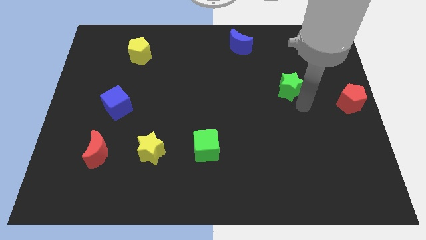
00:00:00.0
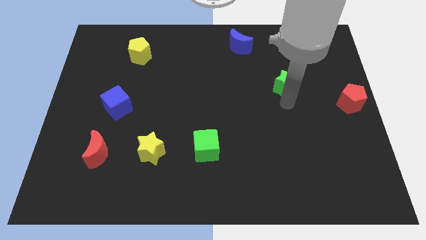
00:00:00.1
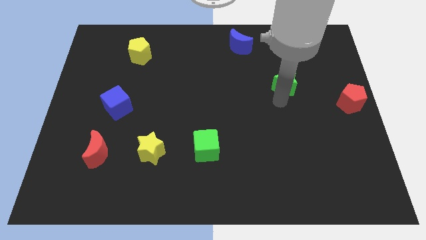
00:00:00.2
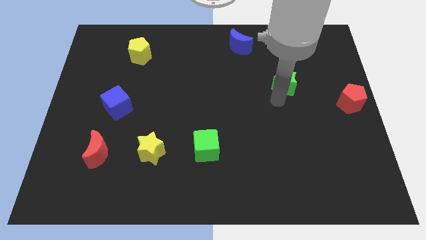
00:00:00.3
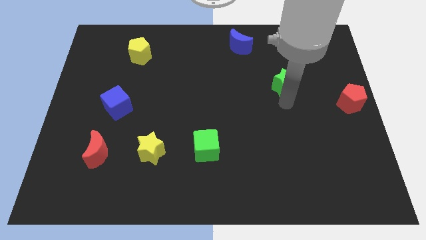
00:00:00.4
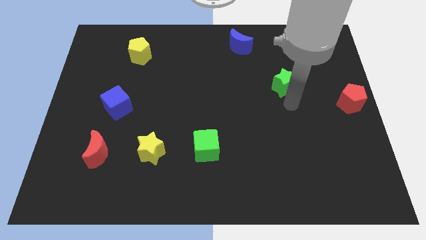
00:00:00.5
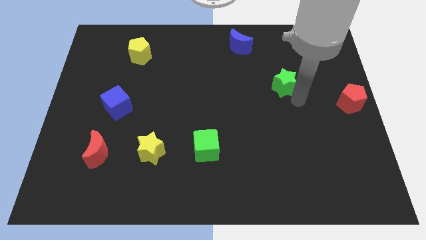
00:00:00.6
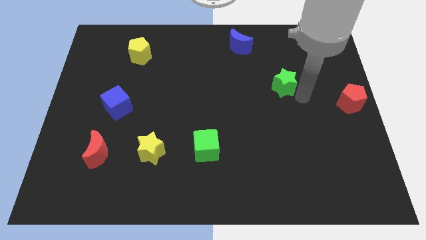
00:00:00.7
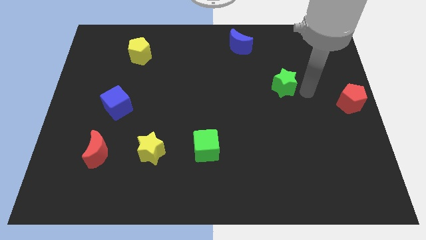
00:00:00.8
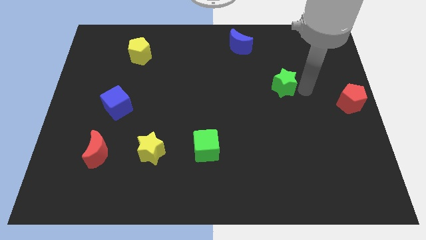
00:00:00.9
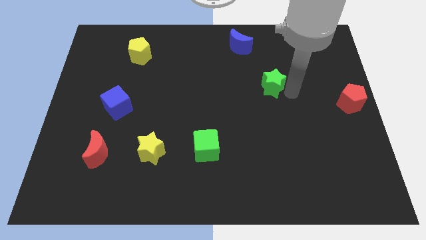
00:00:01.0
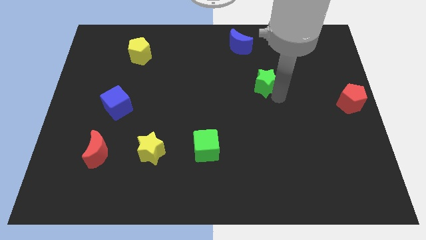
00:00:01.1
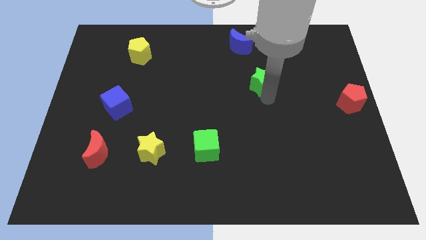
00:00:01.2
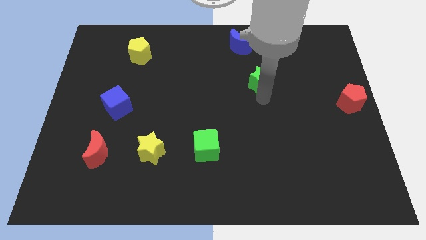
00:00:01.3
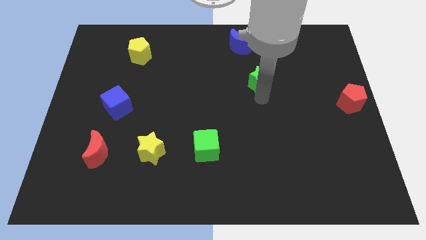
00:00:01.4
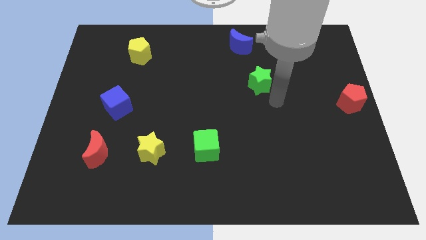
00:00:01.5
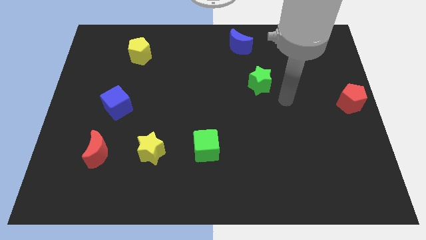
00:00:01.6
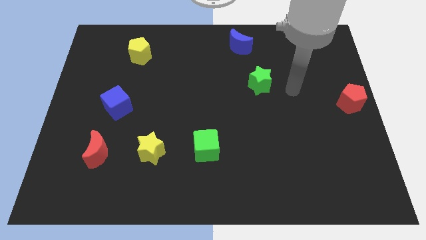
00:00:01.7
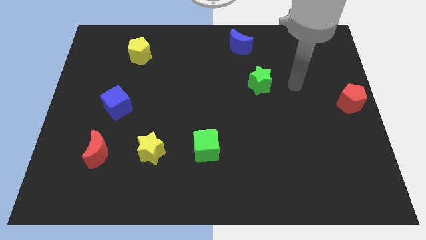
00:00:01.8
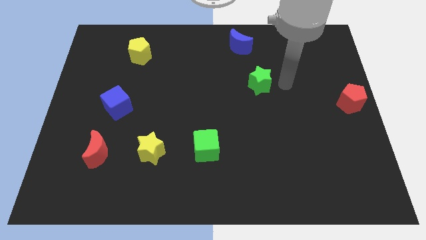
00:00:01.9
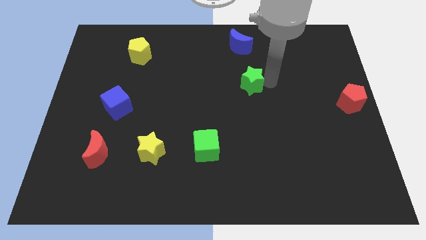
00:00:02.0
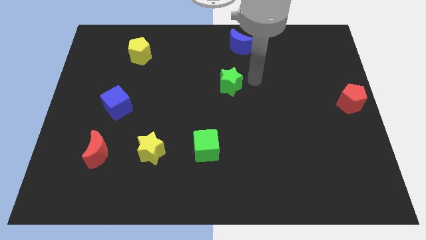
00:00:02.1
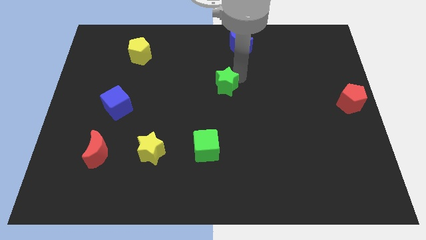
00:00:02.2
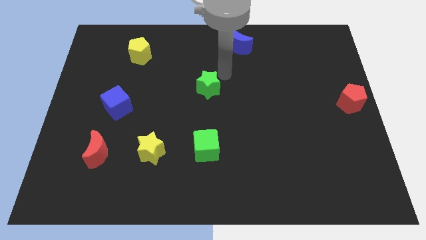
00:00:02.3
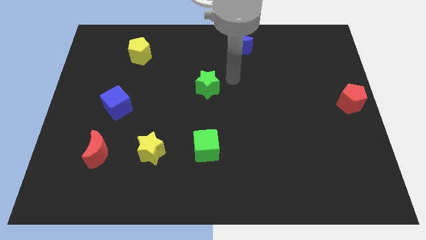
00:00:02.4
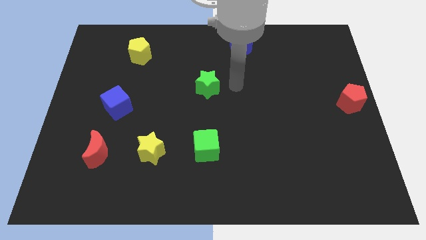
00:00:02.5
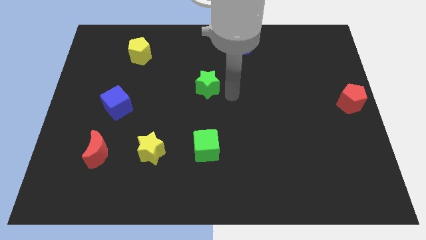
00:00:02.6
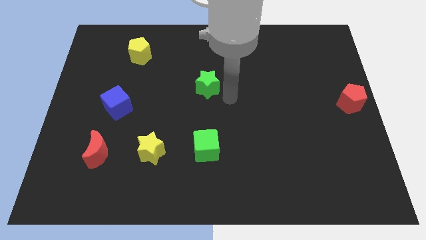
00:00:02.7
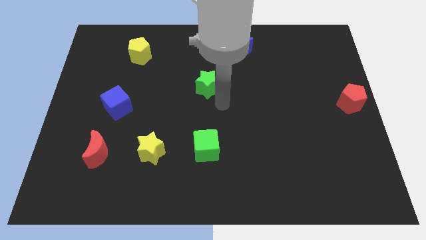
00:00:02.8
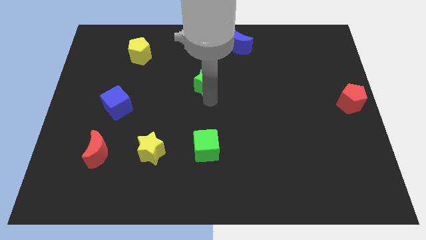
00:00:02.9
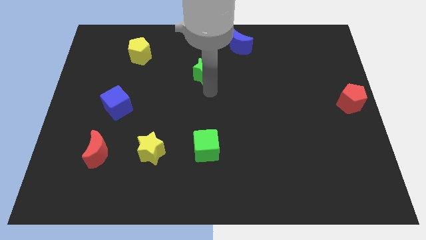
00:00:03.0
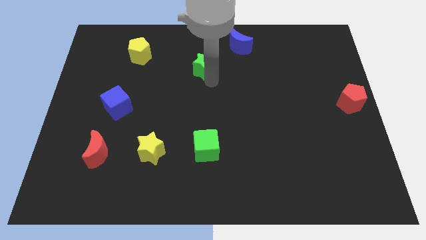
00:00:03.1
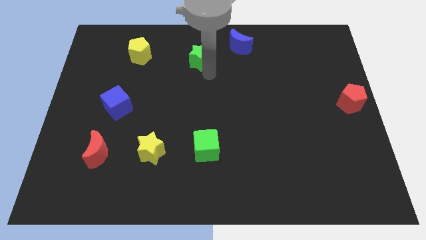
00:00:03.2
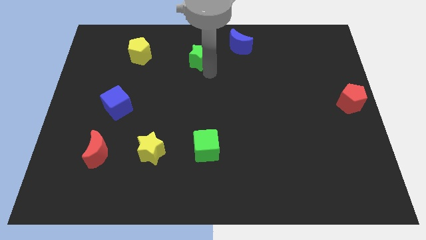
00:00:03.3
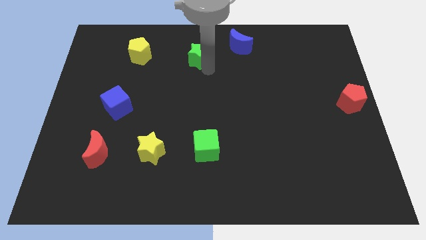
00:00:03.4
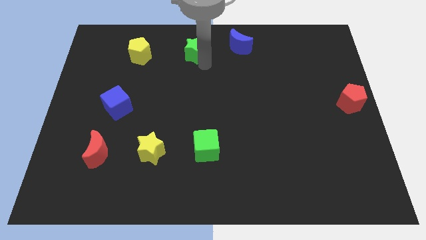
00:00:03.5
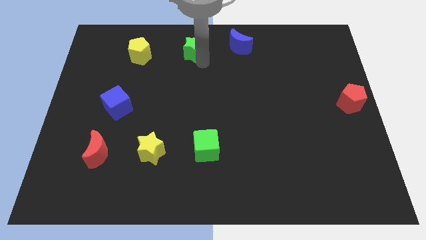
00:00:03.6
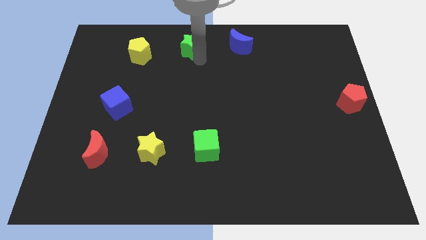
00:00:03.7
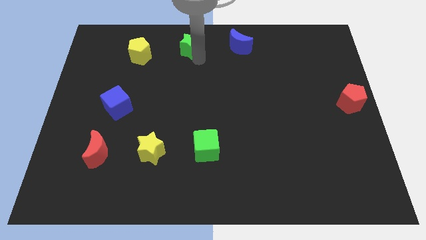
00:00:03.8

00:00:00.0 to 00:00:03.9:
place the green star in between the yellow pentagon and blue crescent

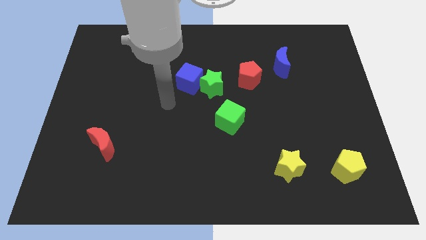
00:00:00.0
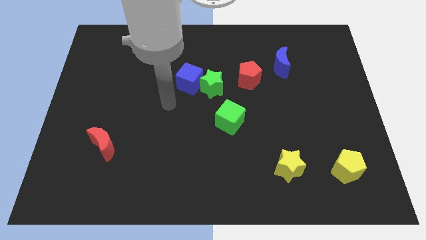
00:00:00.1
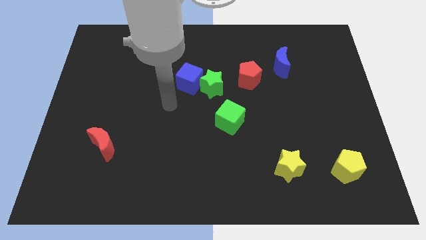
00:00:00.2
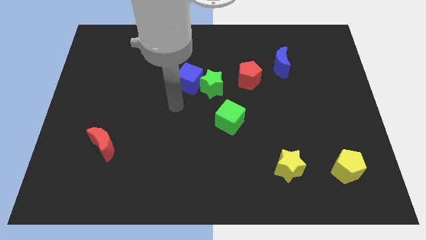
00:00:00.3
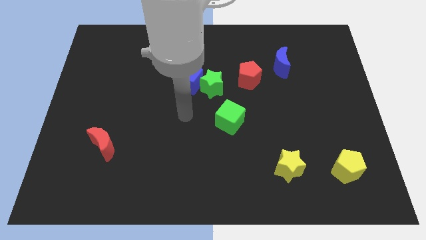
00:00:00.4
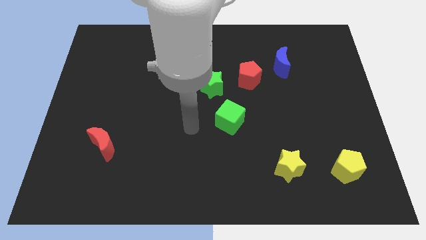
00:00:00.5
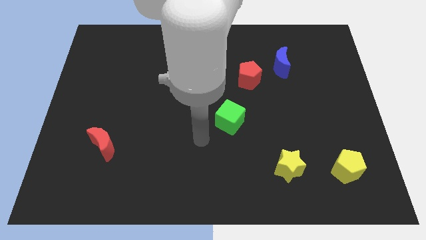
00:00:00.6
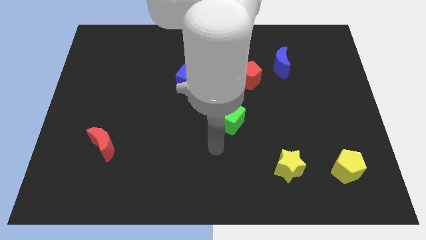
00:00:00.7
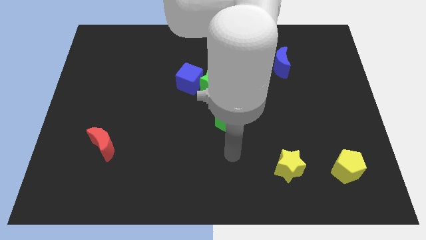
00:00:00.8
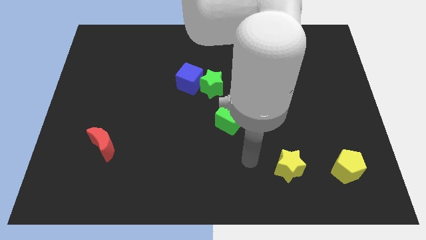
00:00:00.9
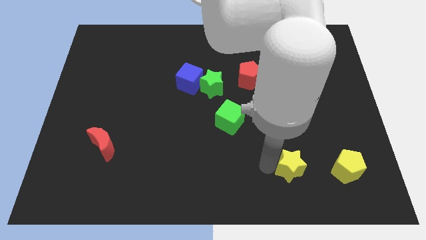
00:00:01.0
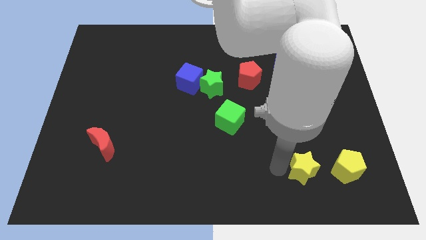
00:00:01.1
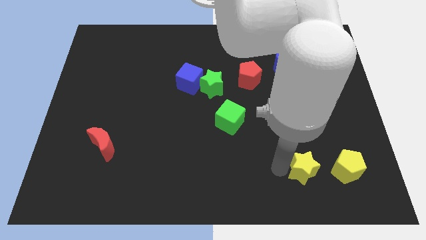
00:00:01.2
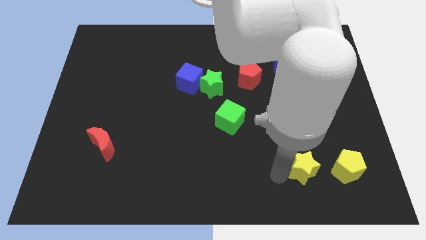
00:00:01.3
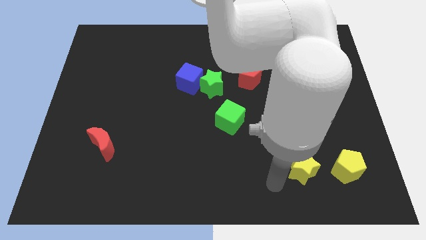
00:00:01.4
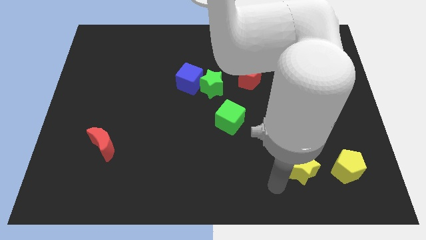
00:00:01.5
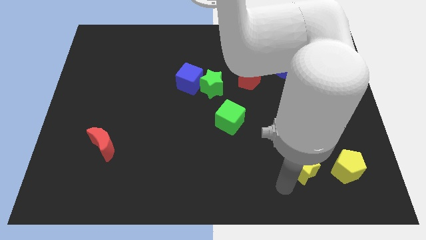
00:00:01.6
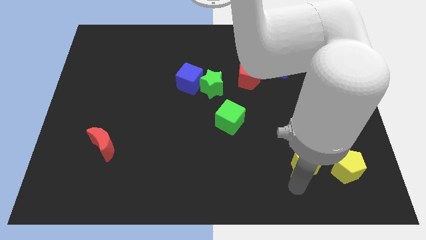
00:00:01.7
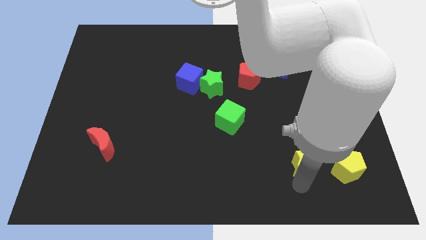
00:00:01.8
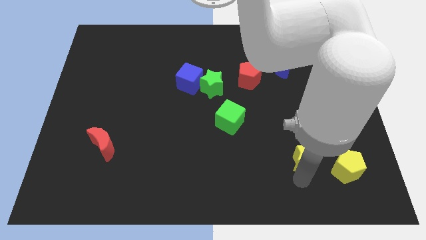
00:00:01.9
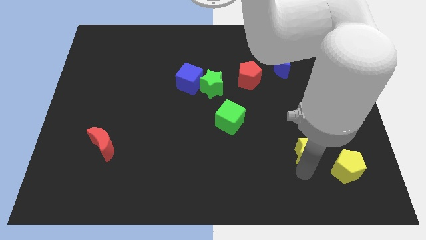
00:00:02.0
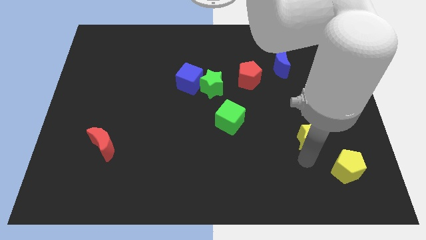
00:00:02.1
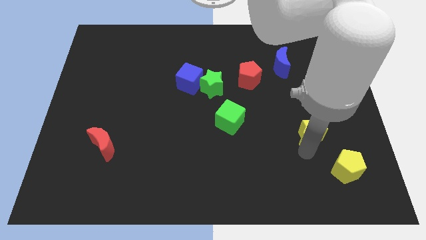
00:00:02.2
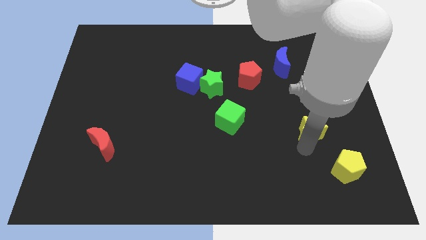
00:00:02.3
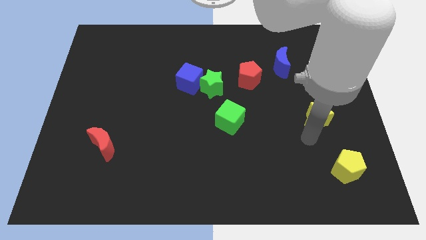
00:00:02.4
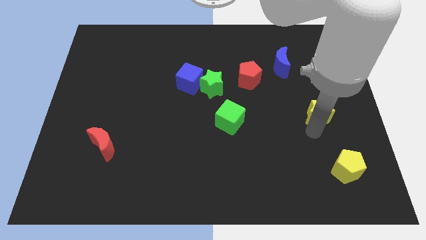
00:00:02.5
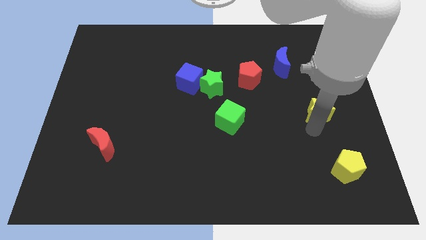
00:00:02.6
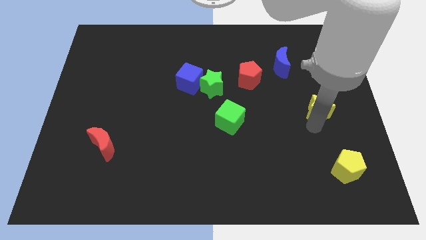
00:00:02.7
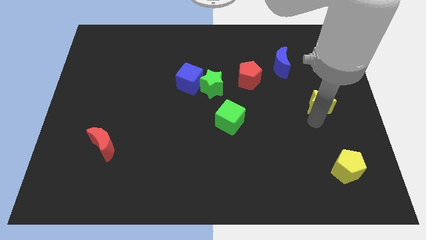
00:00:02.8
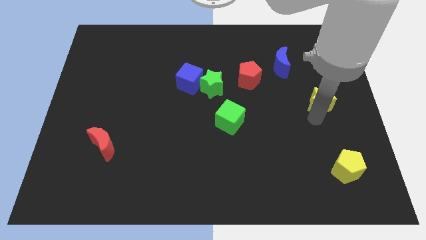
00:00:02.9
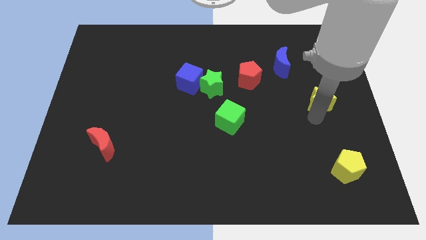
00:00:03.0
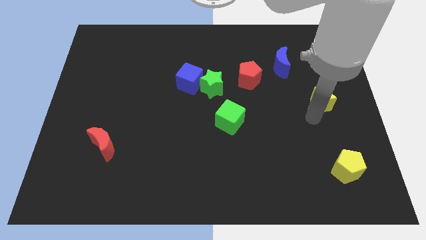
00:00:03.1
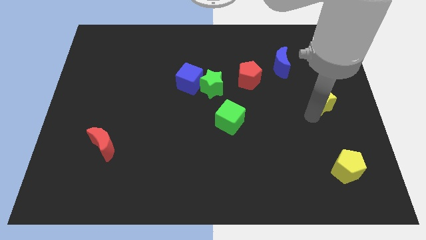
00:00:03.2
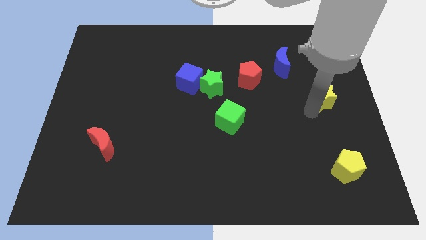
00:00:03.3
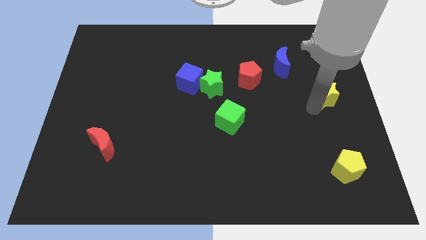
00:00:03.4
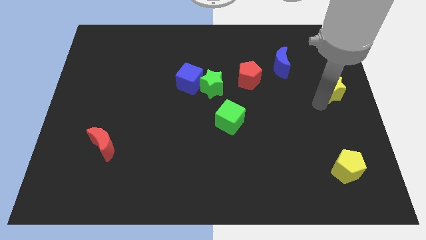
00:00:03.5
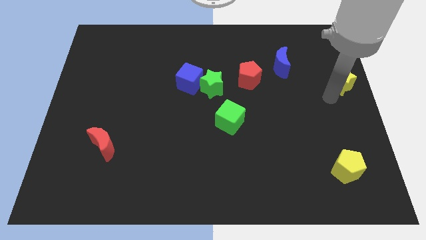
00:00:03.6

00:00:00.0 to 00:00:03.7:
move the yellow star towards the top right side of the board

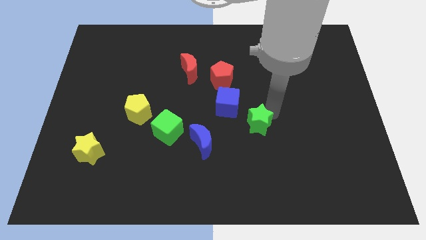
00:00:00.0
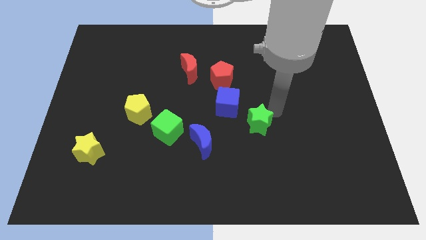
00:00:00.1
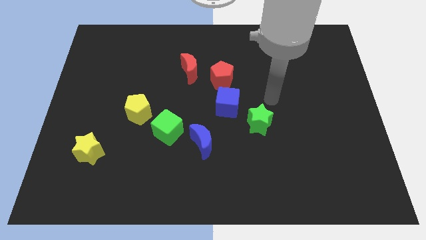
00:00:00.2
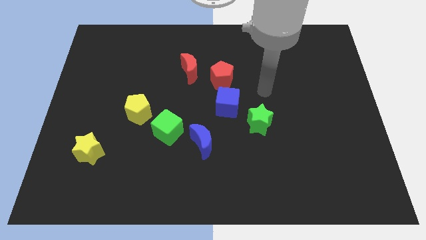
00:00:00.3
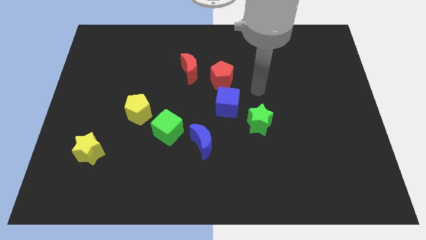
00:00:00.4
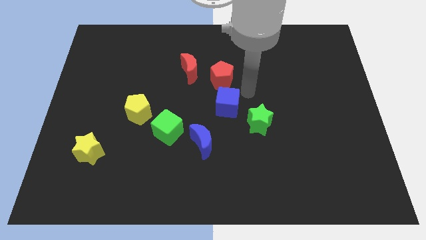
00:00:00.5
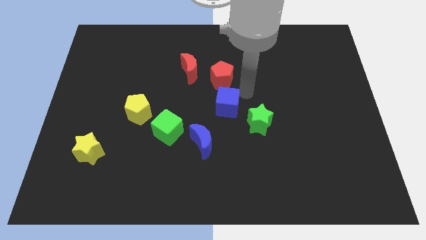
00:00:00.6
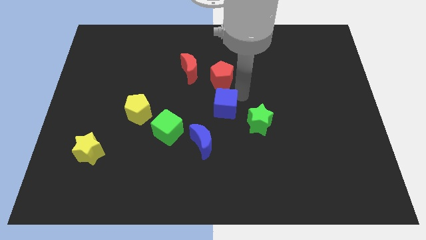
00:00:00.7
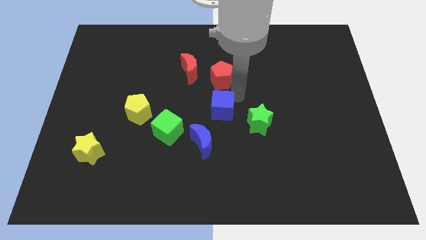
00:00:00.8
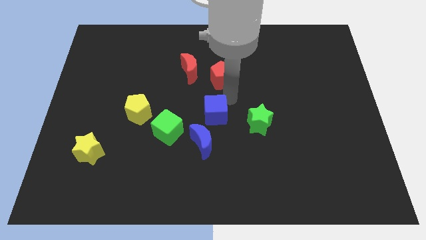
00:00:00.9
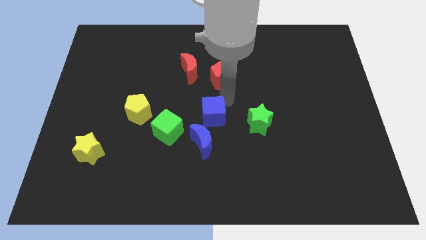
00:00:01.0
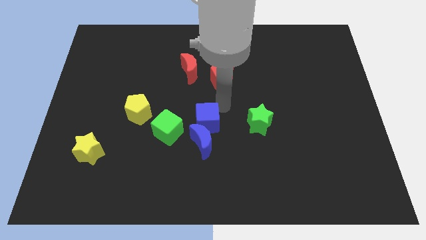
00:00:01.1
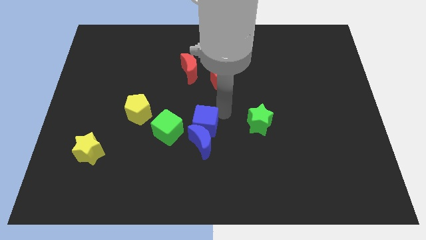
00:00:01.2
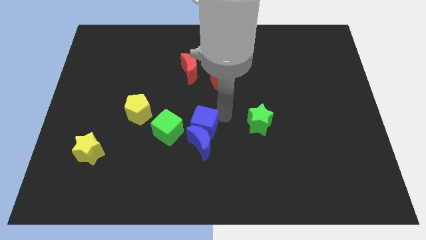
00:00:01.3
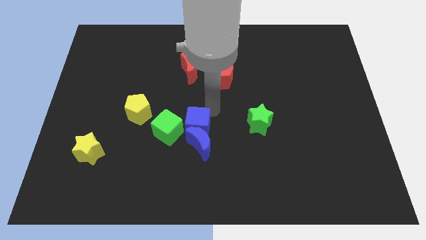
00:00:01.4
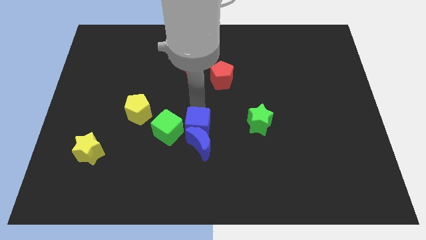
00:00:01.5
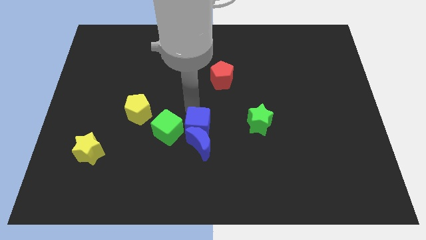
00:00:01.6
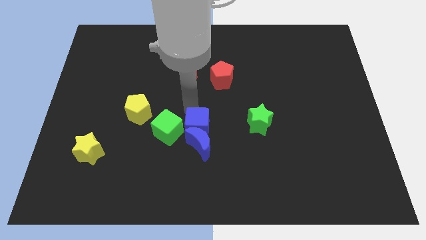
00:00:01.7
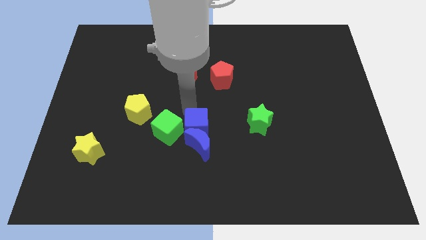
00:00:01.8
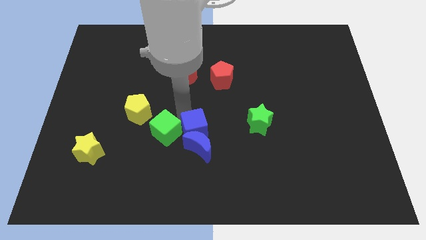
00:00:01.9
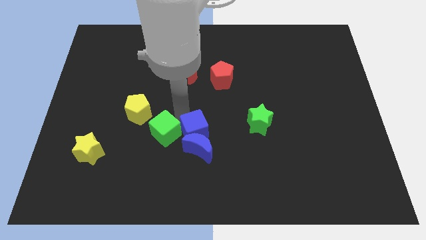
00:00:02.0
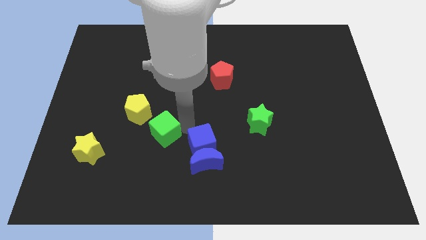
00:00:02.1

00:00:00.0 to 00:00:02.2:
push blue cube into blue moon
